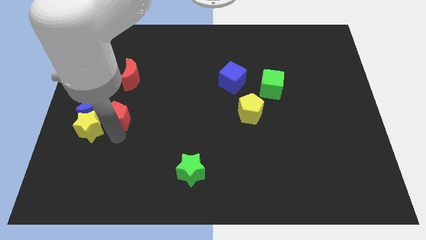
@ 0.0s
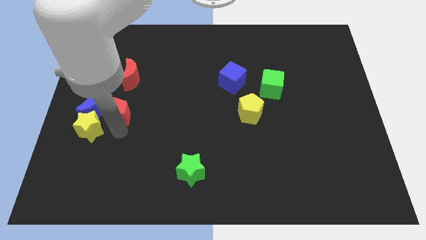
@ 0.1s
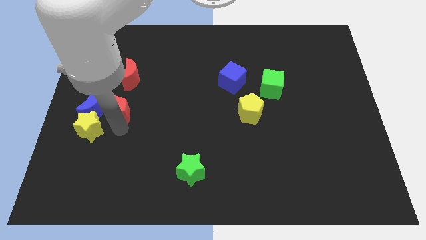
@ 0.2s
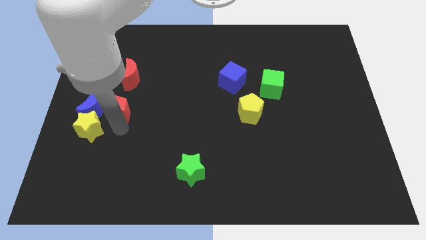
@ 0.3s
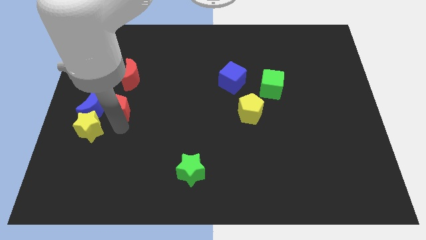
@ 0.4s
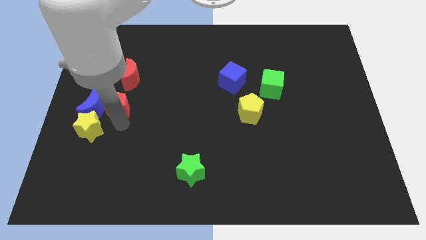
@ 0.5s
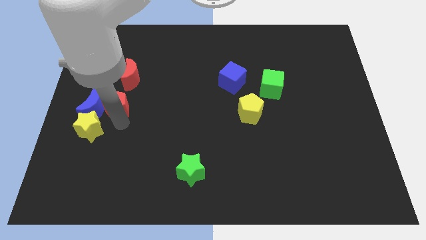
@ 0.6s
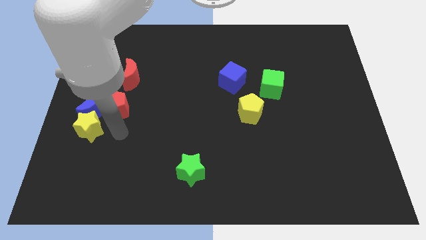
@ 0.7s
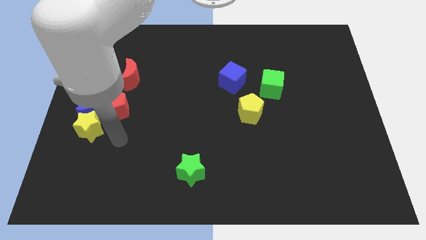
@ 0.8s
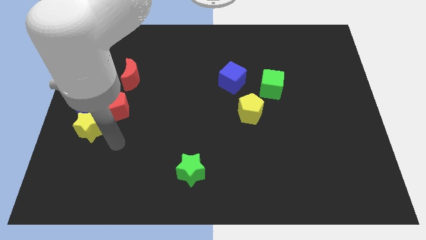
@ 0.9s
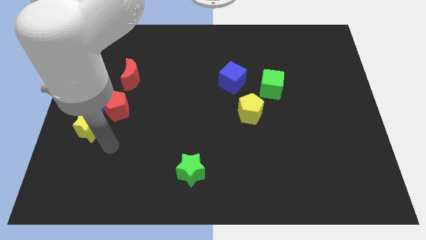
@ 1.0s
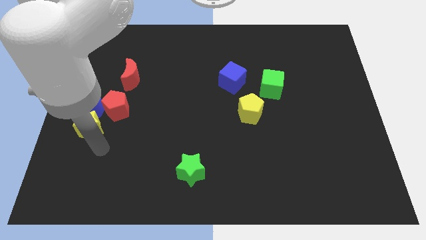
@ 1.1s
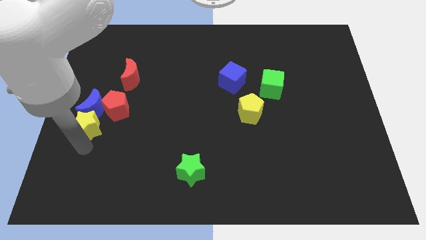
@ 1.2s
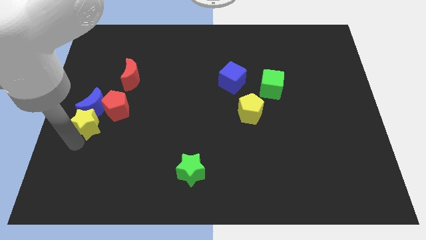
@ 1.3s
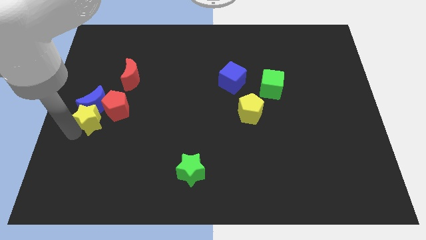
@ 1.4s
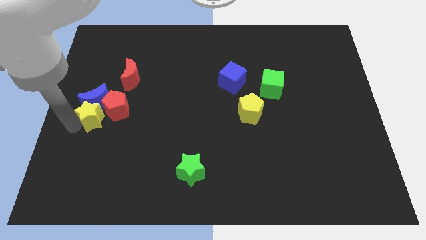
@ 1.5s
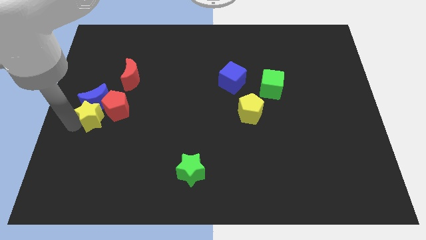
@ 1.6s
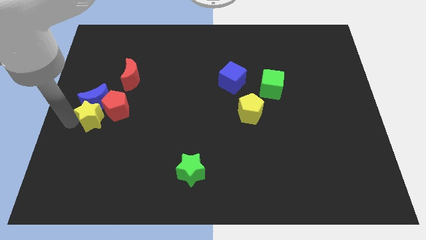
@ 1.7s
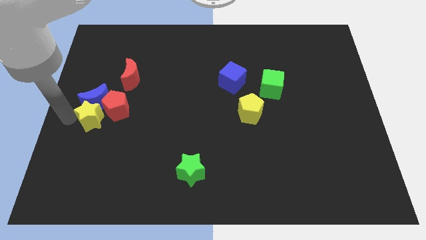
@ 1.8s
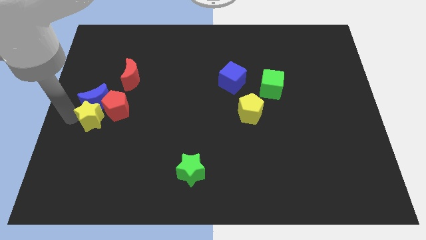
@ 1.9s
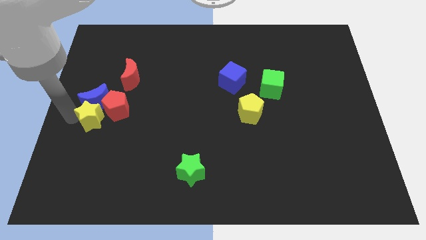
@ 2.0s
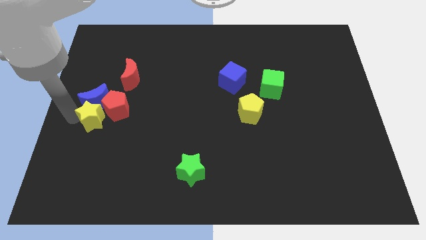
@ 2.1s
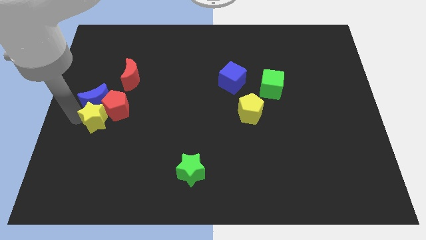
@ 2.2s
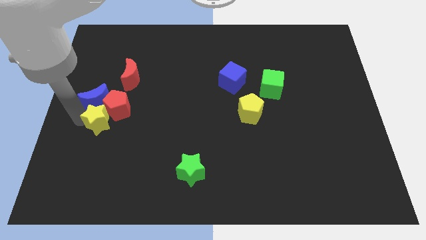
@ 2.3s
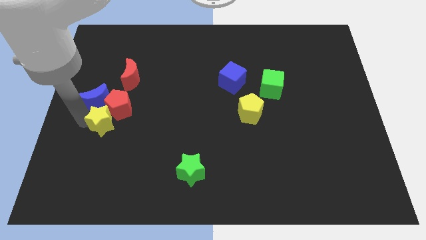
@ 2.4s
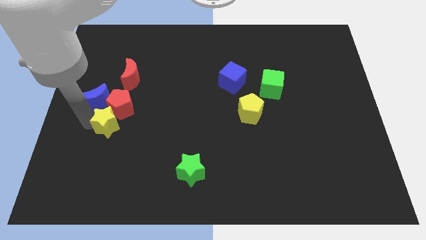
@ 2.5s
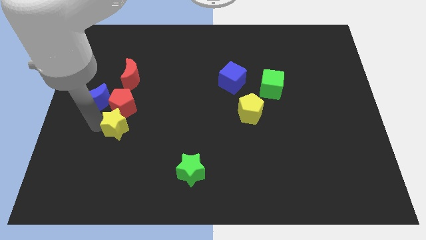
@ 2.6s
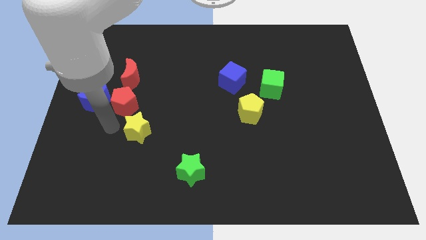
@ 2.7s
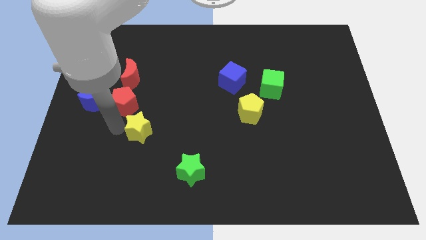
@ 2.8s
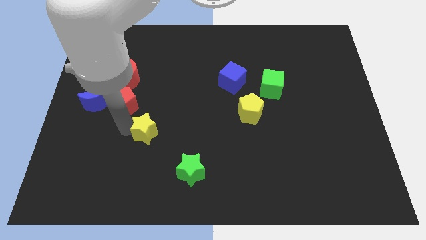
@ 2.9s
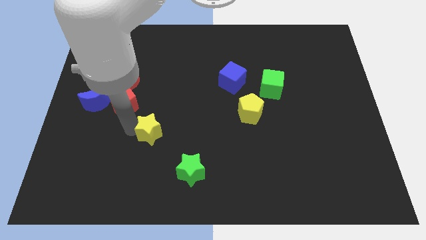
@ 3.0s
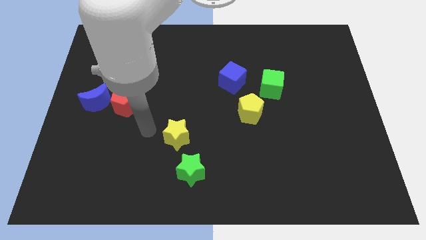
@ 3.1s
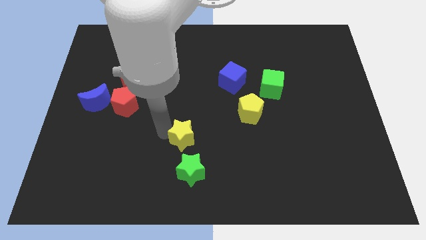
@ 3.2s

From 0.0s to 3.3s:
push the yellow star to the top of the green star

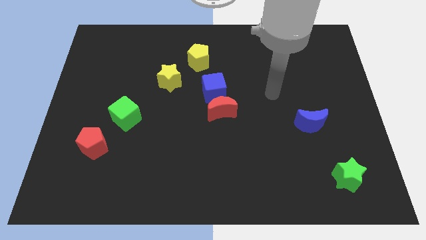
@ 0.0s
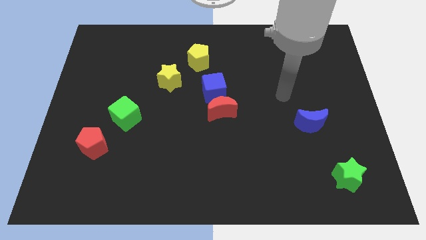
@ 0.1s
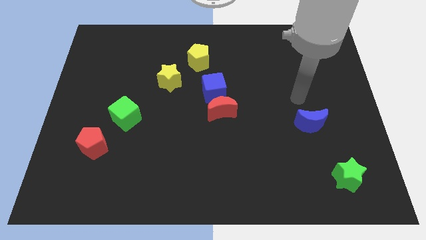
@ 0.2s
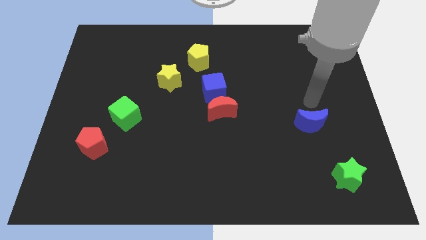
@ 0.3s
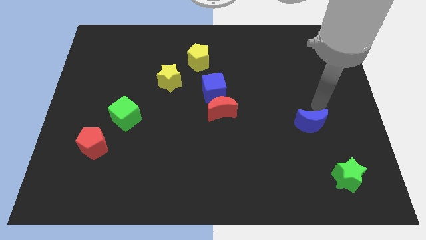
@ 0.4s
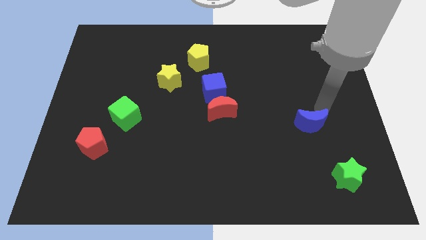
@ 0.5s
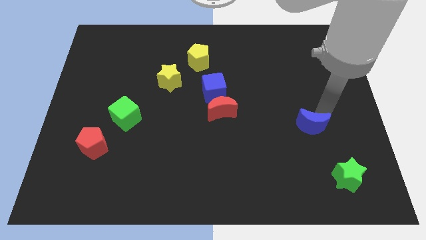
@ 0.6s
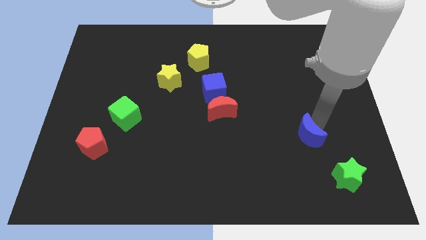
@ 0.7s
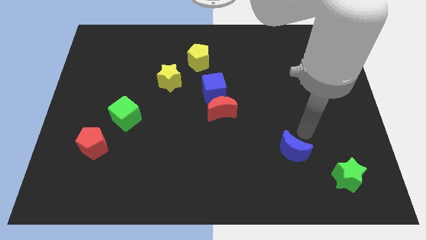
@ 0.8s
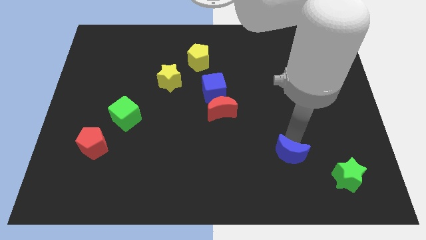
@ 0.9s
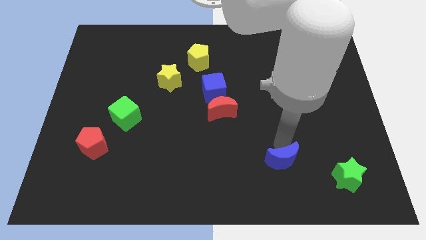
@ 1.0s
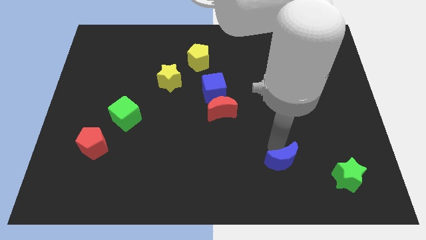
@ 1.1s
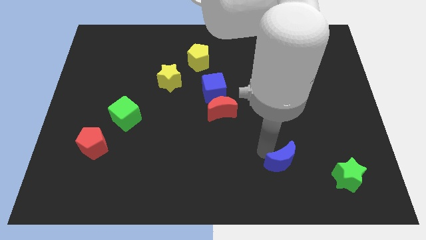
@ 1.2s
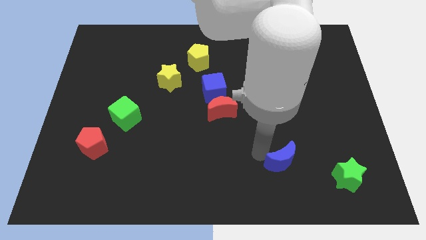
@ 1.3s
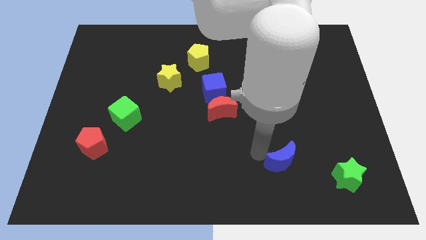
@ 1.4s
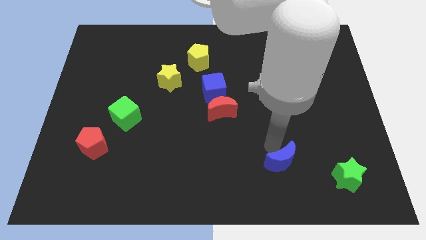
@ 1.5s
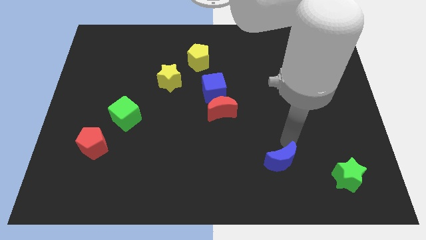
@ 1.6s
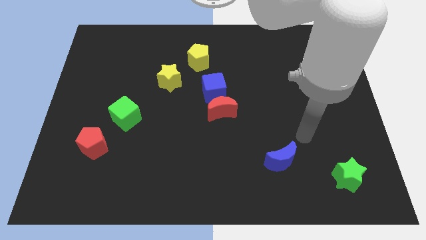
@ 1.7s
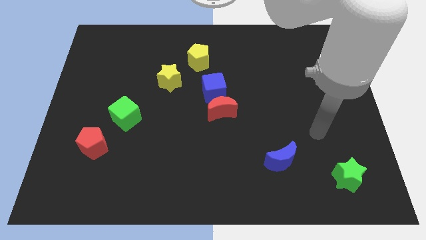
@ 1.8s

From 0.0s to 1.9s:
push the blue moon towards the bottom side of the board

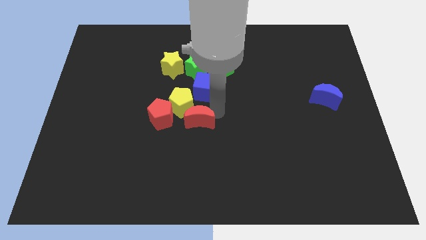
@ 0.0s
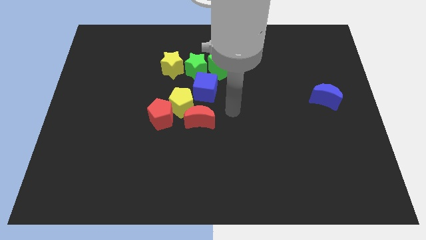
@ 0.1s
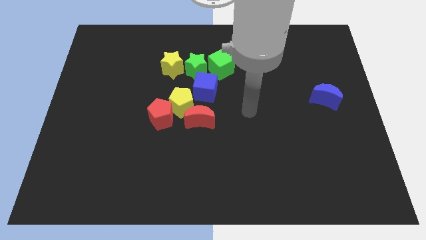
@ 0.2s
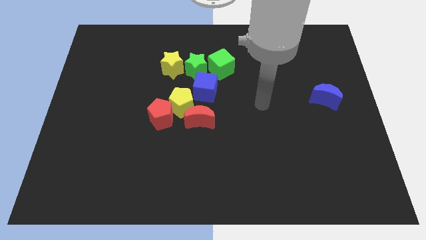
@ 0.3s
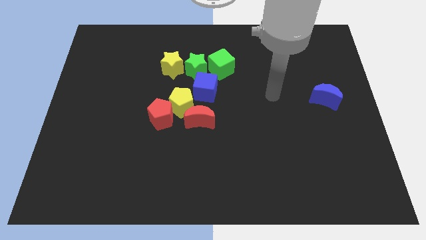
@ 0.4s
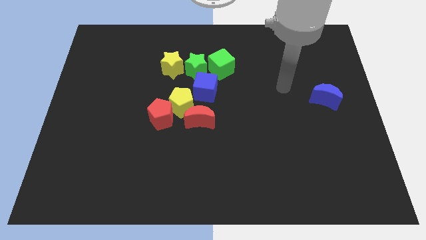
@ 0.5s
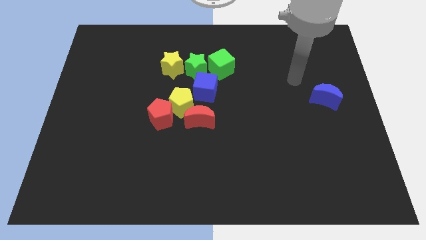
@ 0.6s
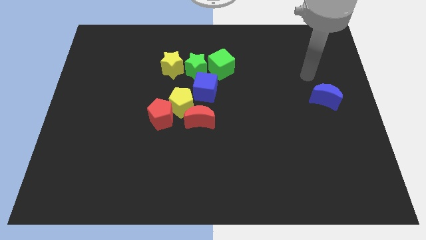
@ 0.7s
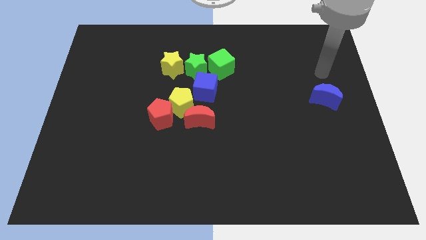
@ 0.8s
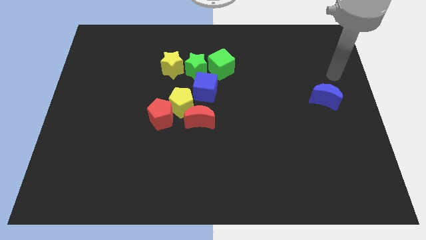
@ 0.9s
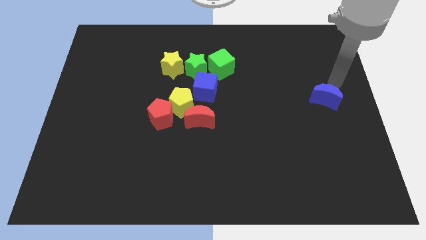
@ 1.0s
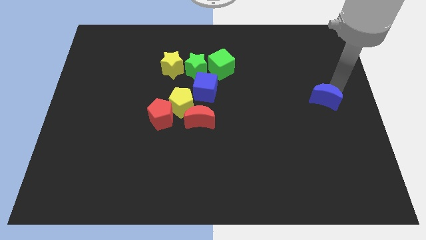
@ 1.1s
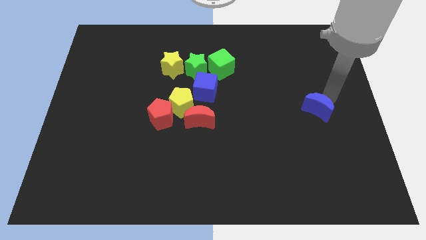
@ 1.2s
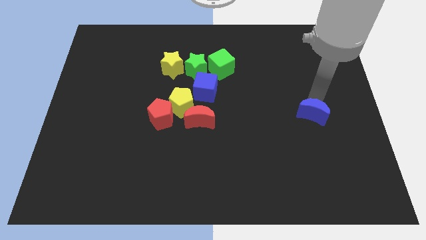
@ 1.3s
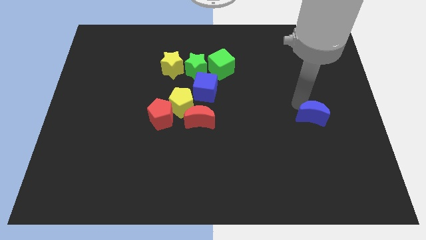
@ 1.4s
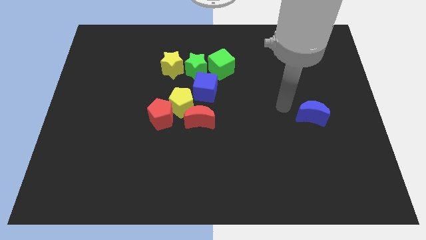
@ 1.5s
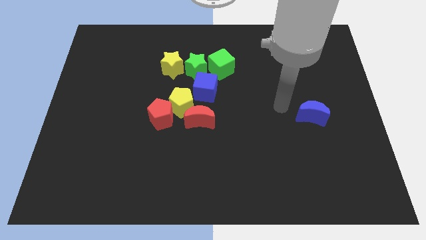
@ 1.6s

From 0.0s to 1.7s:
move the blue crescent to the right of the red crescent

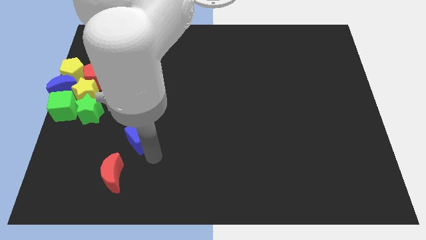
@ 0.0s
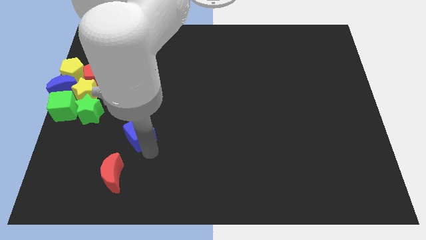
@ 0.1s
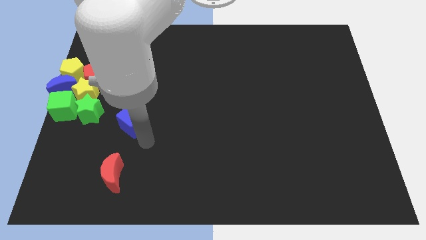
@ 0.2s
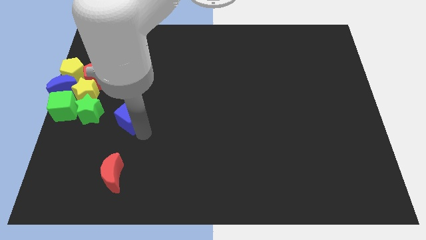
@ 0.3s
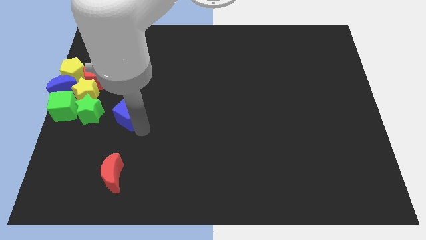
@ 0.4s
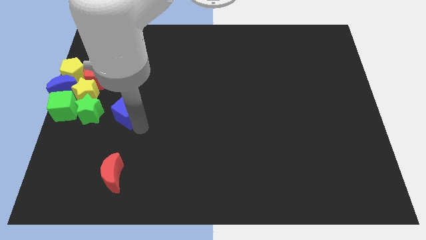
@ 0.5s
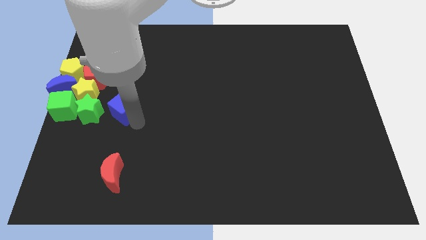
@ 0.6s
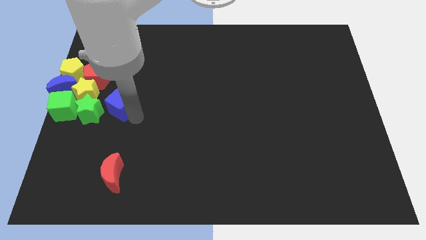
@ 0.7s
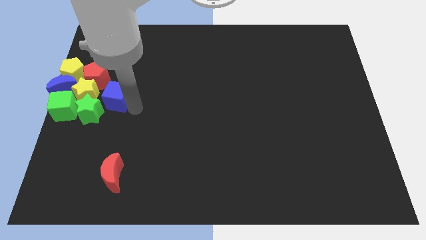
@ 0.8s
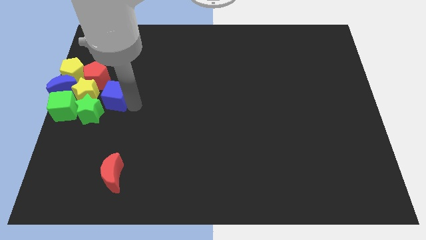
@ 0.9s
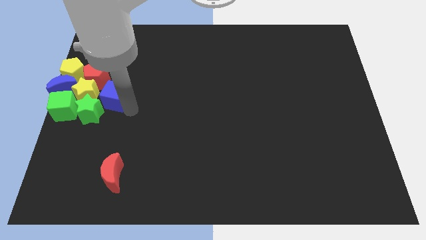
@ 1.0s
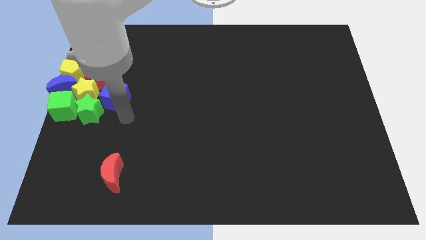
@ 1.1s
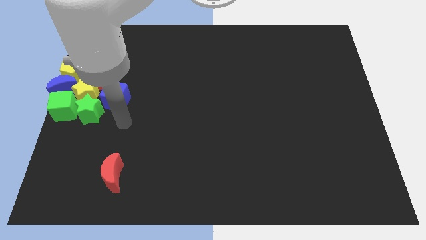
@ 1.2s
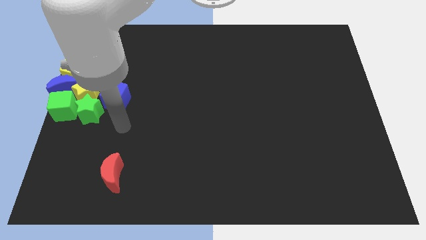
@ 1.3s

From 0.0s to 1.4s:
put the blue cube on the right side of the yellow star

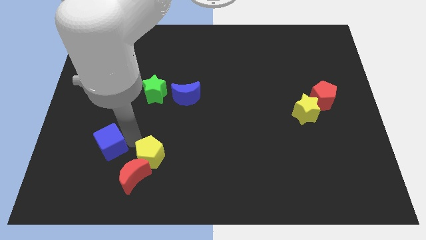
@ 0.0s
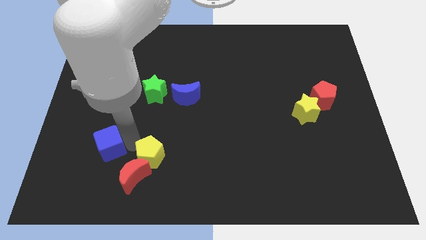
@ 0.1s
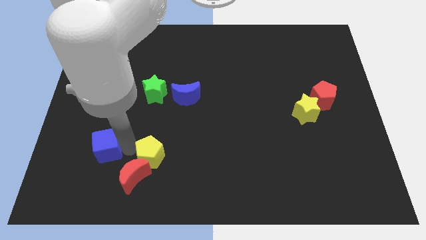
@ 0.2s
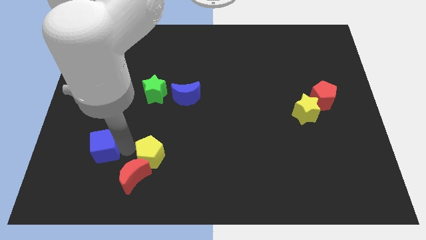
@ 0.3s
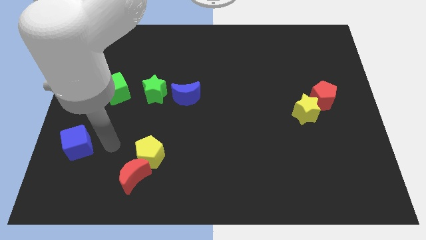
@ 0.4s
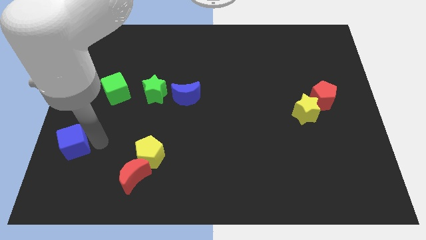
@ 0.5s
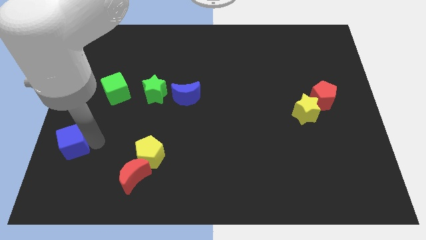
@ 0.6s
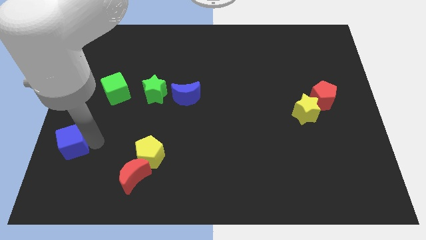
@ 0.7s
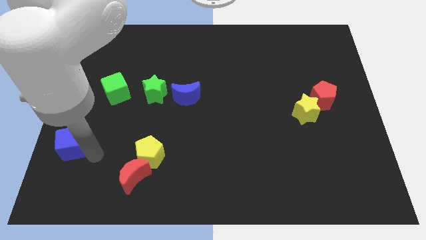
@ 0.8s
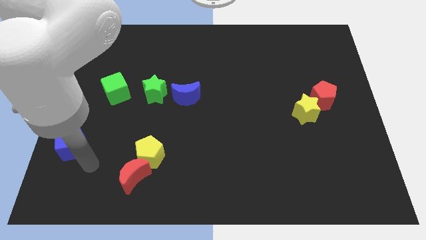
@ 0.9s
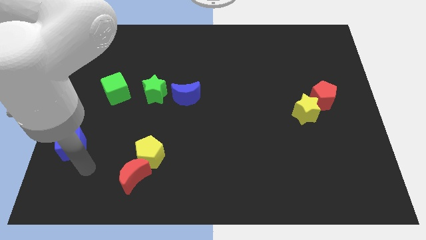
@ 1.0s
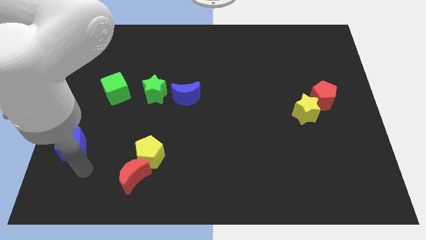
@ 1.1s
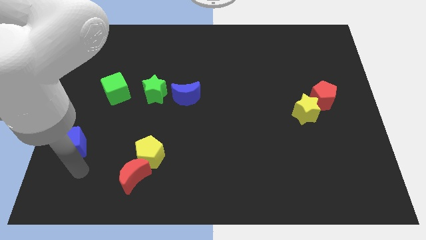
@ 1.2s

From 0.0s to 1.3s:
move the blue cube to the left side of the board
